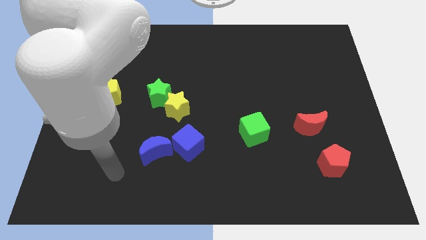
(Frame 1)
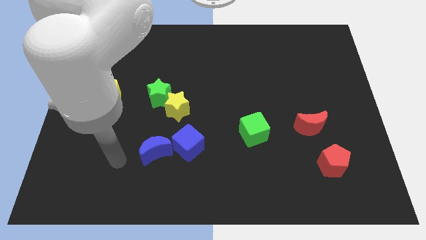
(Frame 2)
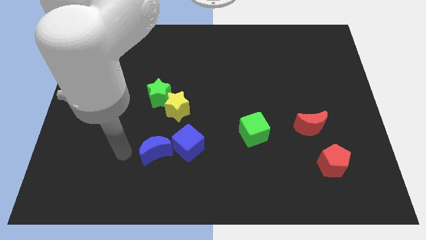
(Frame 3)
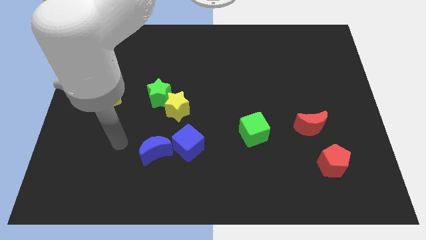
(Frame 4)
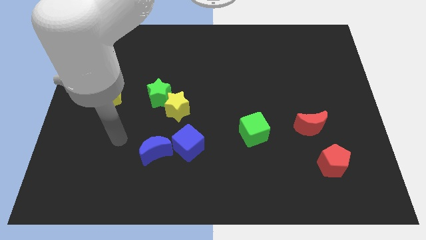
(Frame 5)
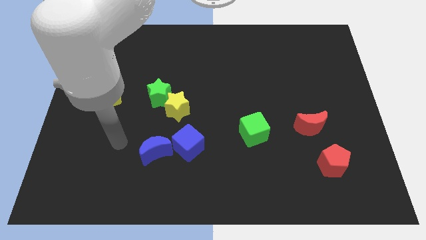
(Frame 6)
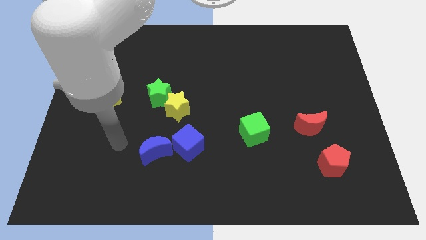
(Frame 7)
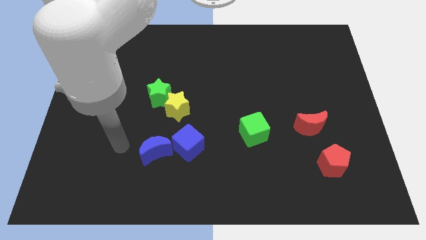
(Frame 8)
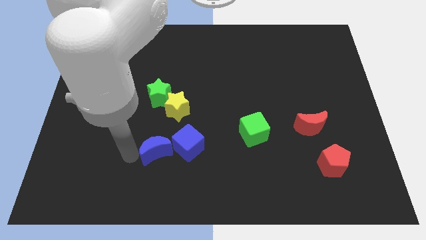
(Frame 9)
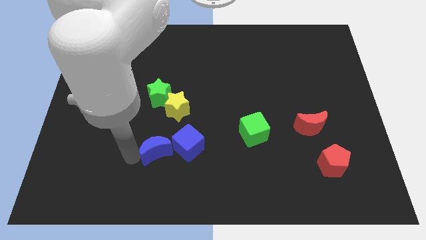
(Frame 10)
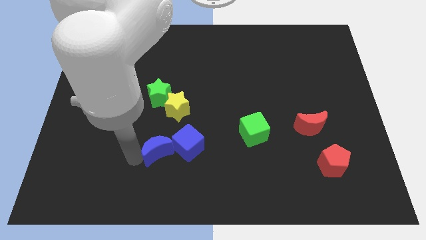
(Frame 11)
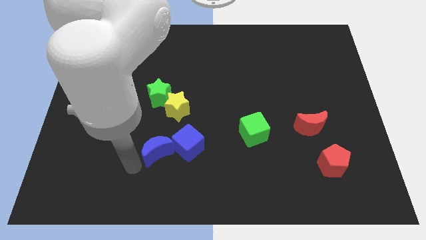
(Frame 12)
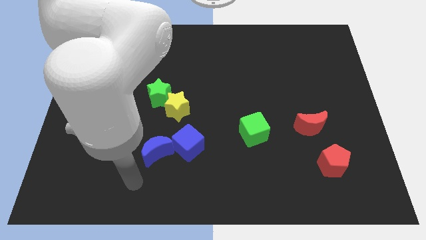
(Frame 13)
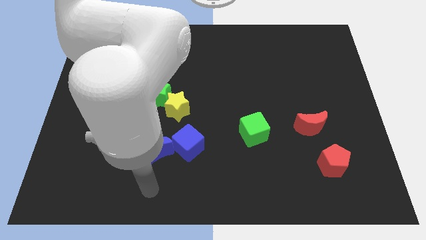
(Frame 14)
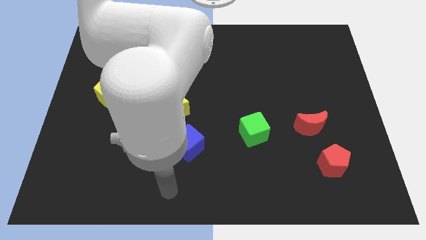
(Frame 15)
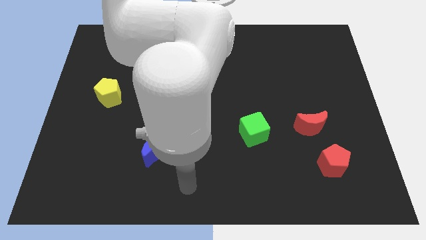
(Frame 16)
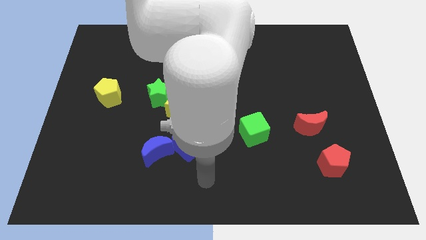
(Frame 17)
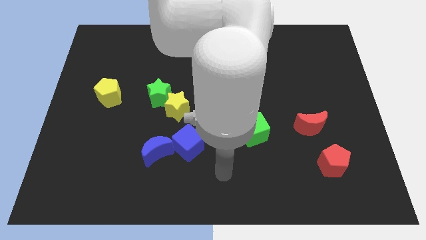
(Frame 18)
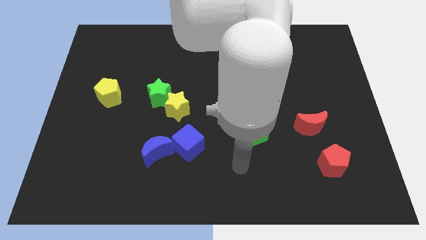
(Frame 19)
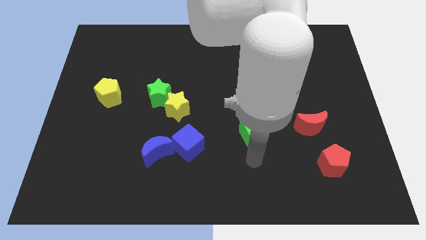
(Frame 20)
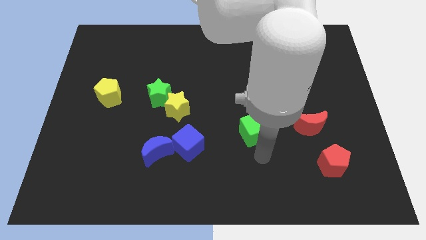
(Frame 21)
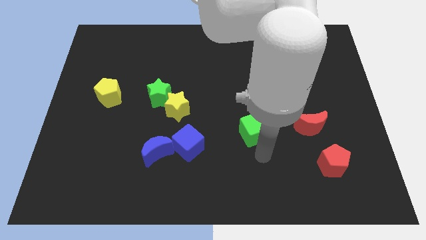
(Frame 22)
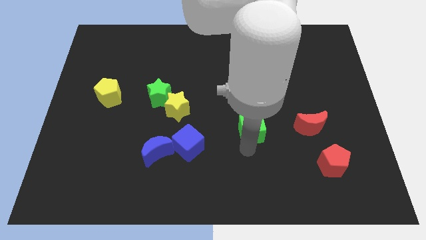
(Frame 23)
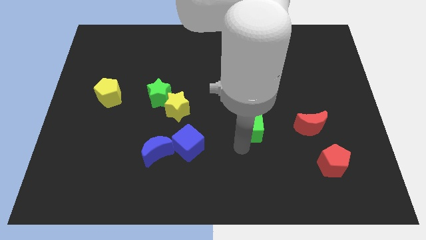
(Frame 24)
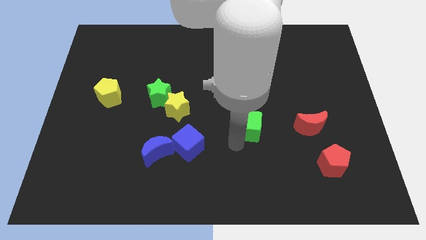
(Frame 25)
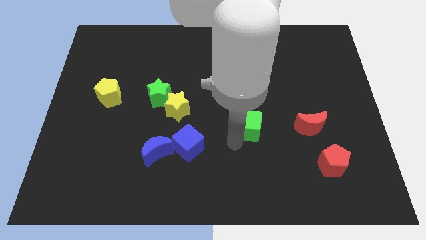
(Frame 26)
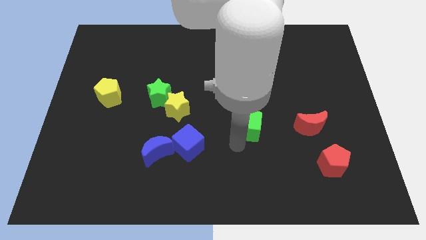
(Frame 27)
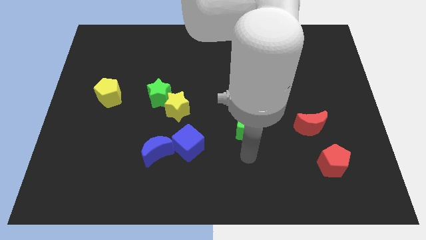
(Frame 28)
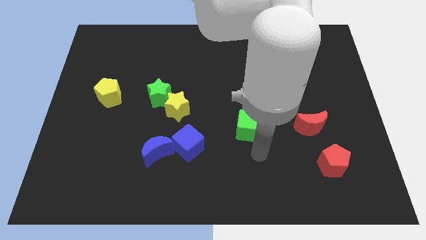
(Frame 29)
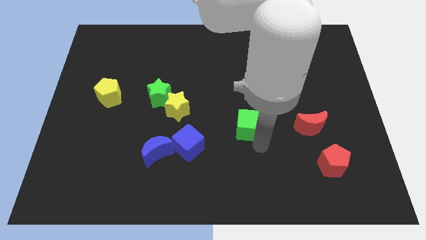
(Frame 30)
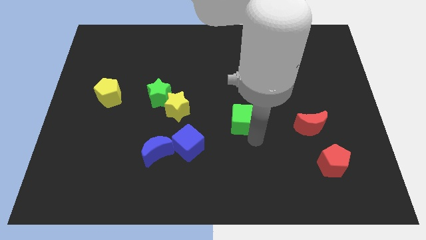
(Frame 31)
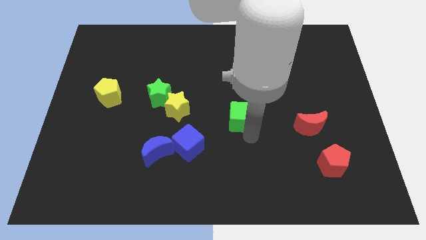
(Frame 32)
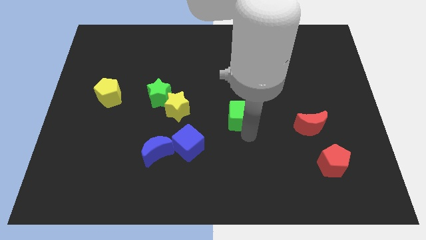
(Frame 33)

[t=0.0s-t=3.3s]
push green cube slightly upwards

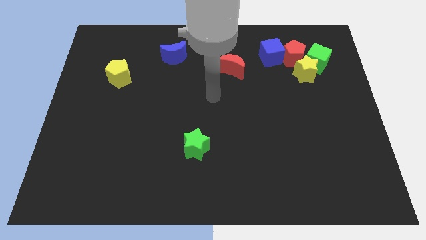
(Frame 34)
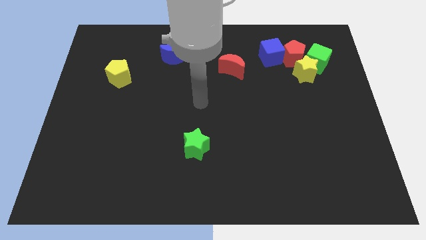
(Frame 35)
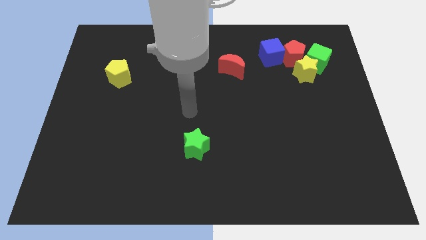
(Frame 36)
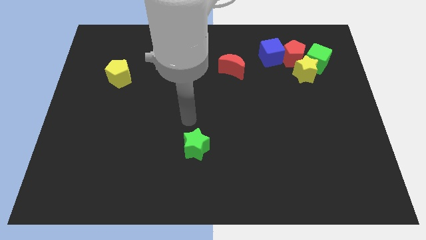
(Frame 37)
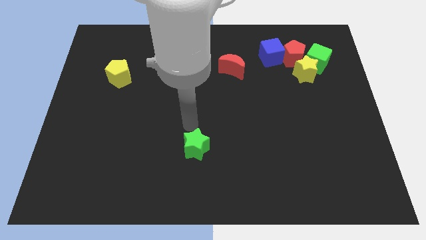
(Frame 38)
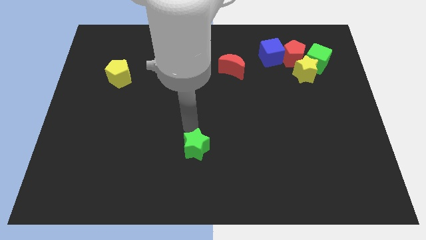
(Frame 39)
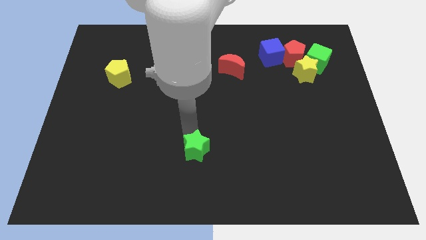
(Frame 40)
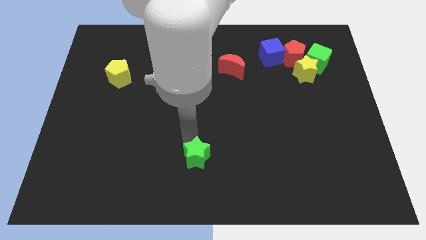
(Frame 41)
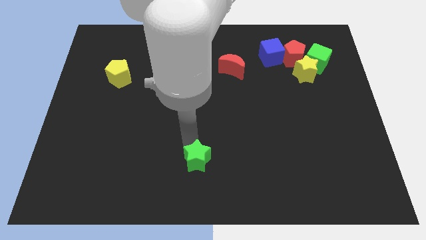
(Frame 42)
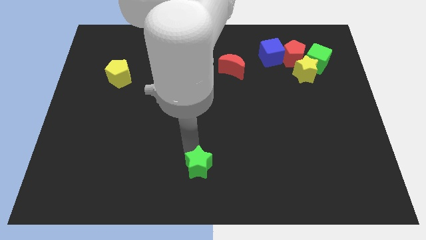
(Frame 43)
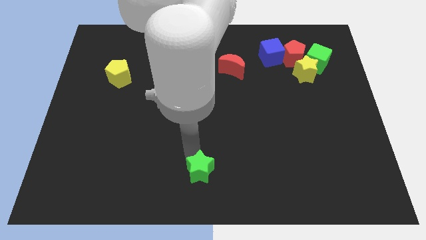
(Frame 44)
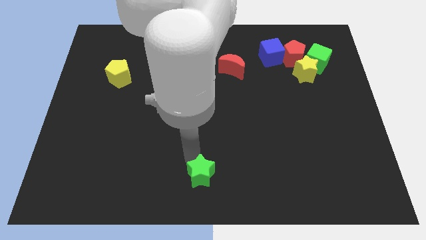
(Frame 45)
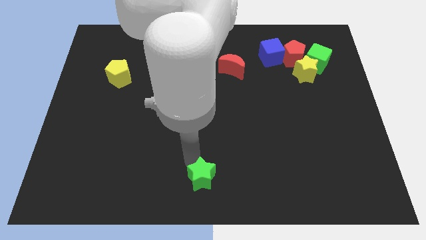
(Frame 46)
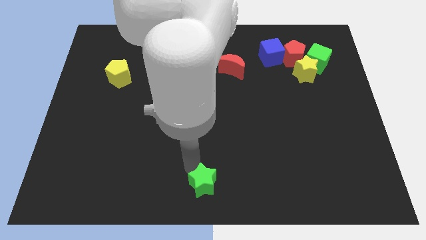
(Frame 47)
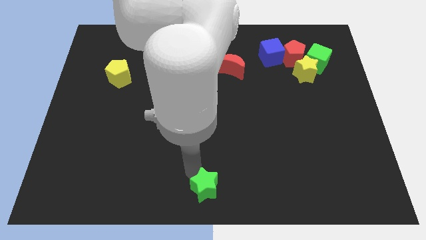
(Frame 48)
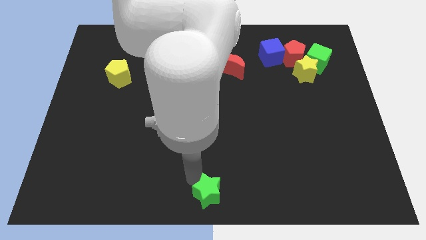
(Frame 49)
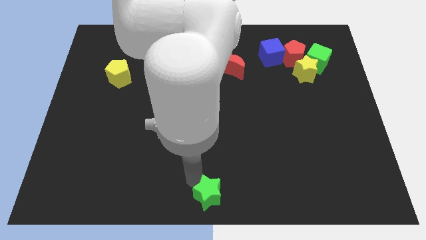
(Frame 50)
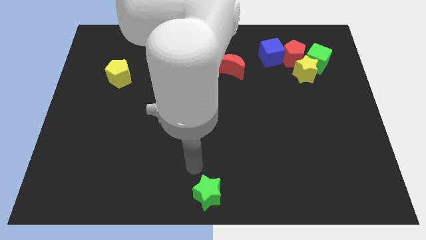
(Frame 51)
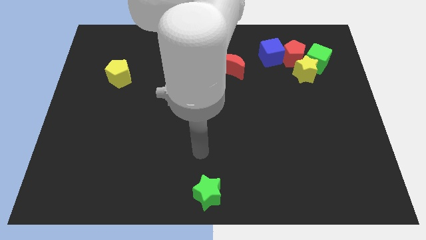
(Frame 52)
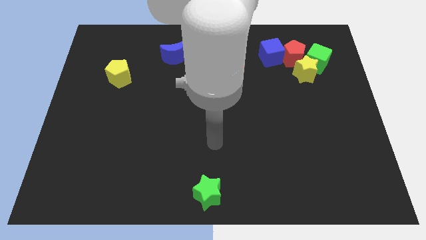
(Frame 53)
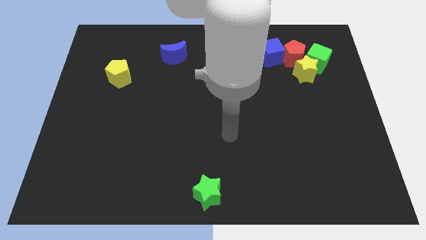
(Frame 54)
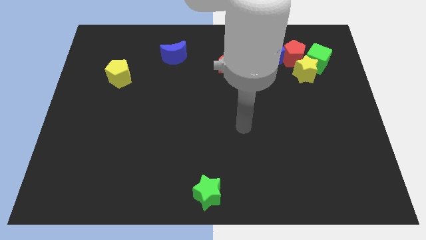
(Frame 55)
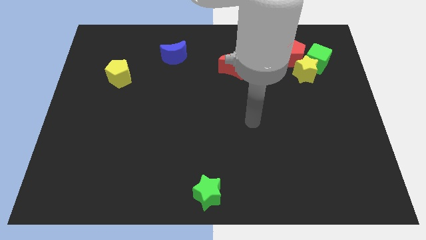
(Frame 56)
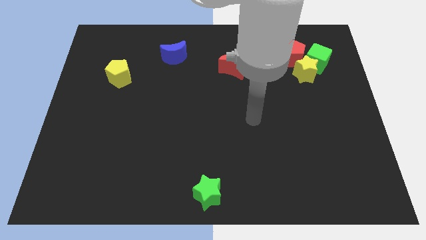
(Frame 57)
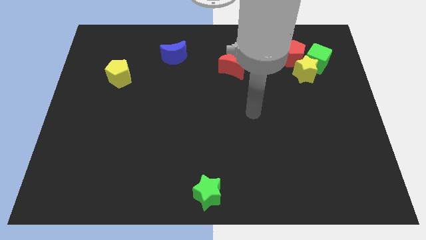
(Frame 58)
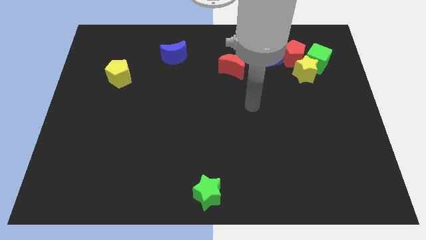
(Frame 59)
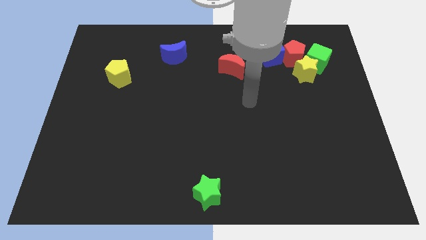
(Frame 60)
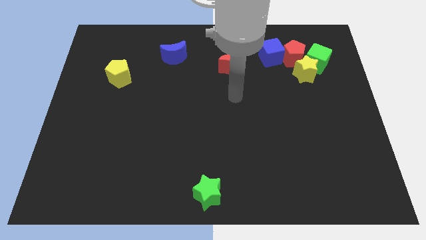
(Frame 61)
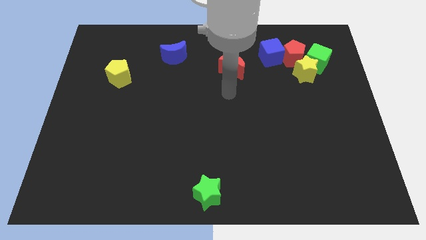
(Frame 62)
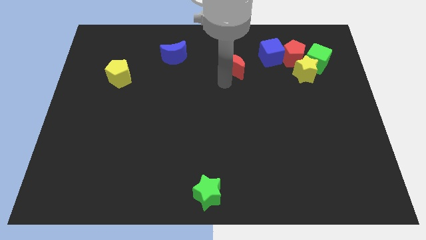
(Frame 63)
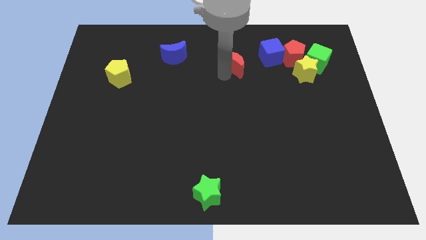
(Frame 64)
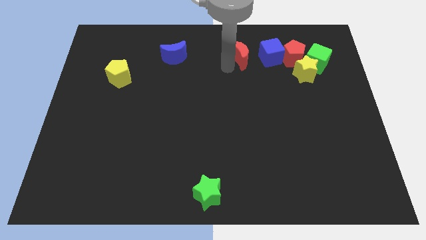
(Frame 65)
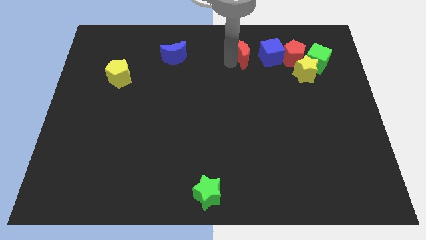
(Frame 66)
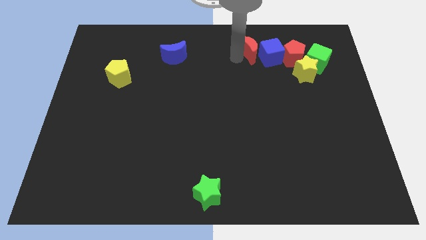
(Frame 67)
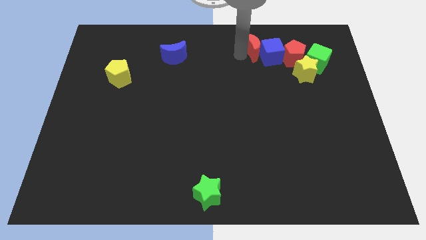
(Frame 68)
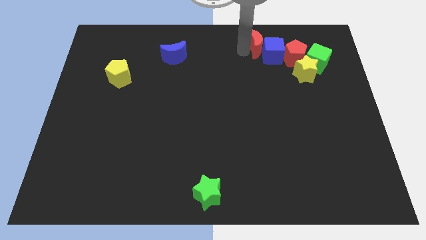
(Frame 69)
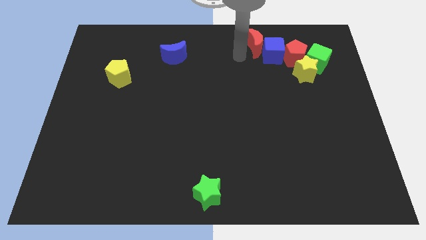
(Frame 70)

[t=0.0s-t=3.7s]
place the green star at the bottom center of the board

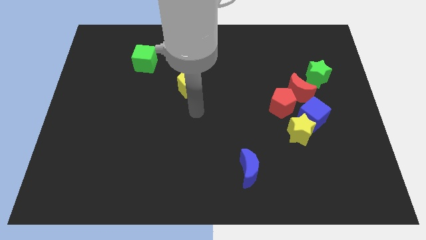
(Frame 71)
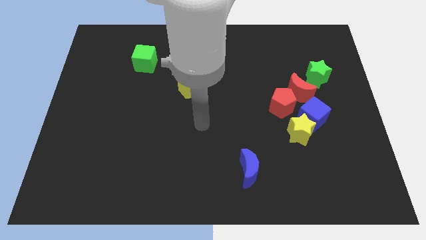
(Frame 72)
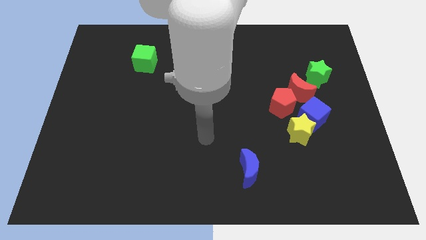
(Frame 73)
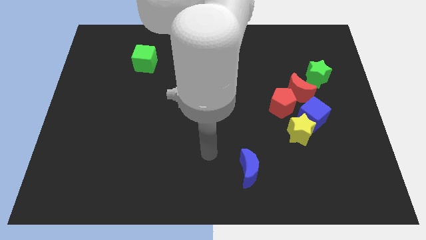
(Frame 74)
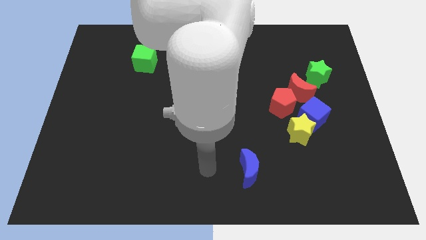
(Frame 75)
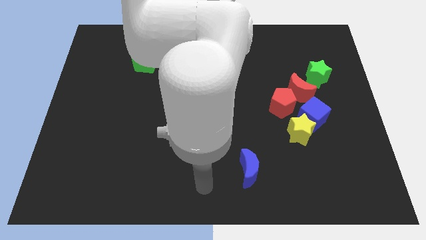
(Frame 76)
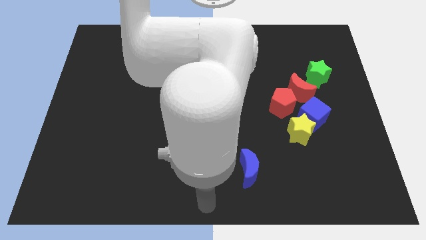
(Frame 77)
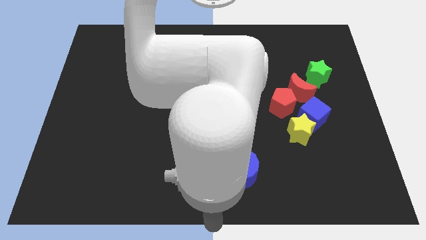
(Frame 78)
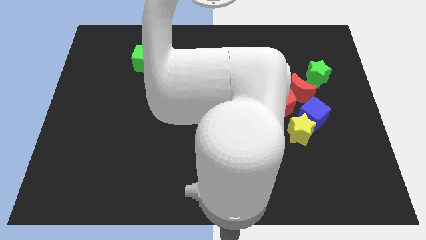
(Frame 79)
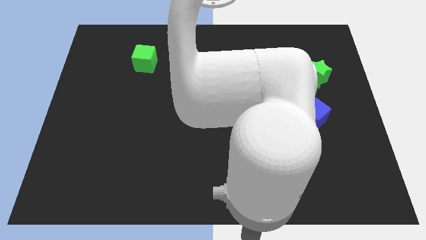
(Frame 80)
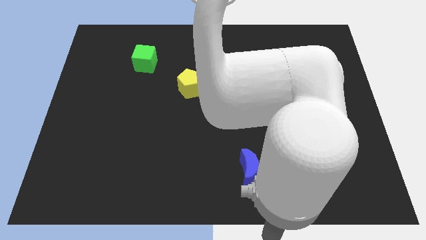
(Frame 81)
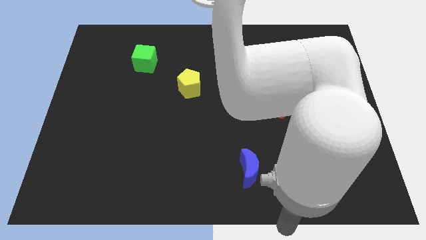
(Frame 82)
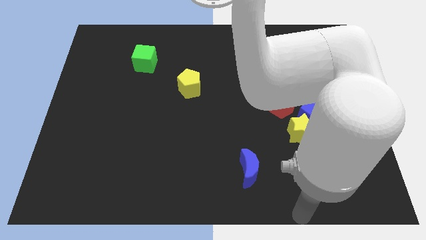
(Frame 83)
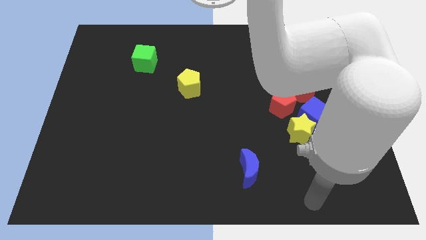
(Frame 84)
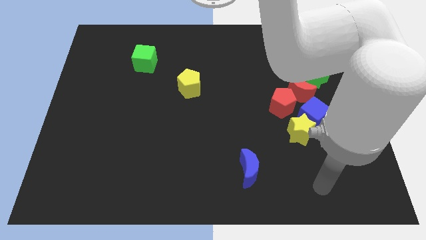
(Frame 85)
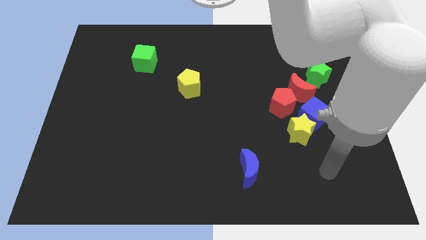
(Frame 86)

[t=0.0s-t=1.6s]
move your arm away from the yellow pentagon

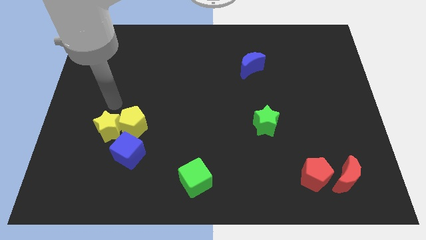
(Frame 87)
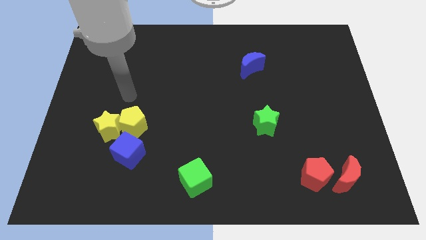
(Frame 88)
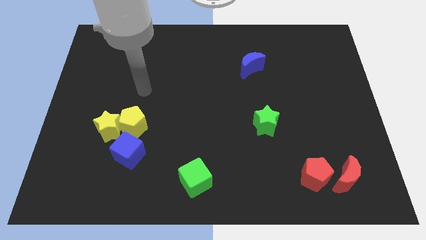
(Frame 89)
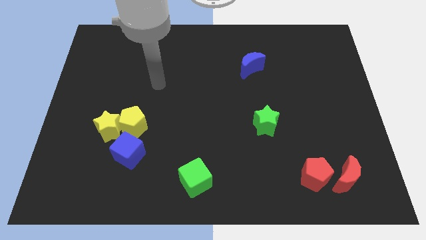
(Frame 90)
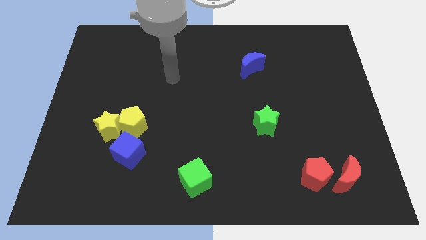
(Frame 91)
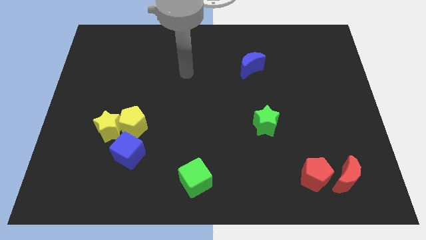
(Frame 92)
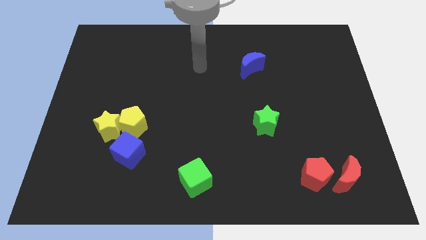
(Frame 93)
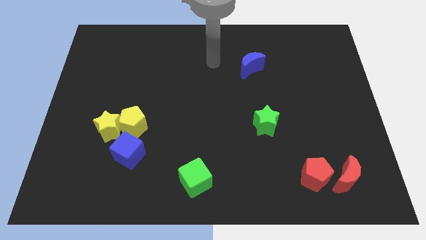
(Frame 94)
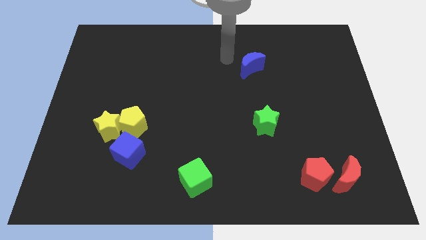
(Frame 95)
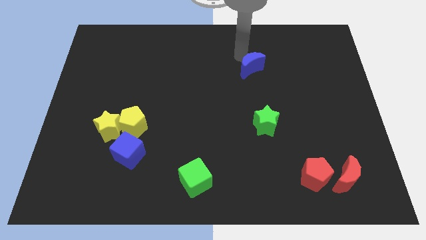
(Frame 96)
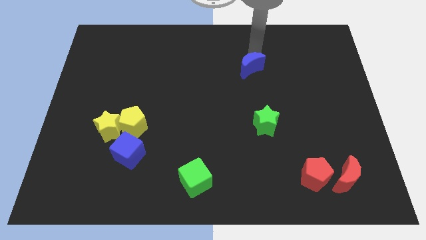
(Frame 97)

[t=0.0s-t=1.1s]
place your hand above the blue crescent
